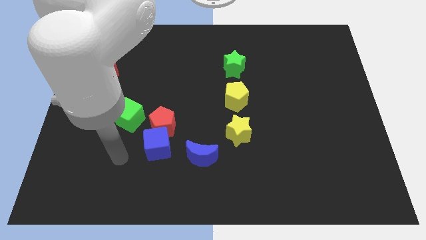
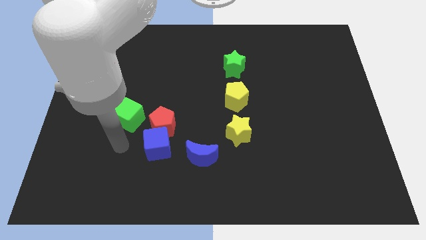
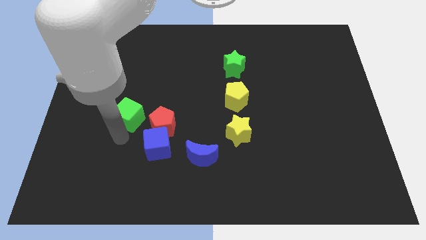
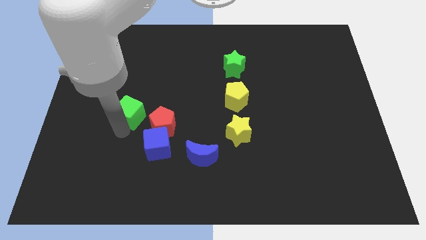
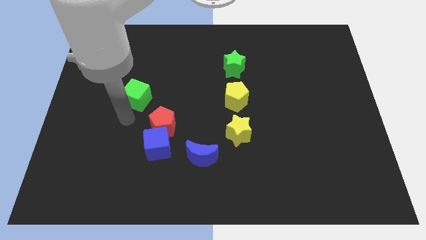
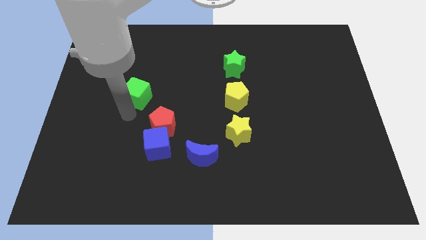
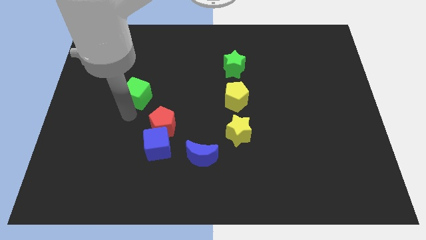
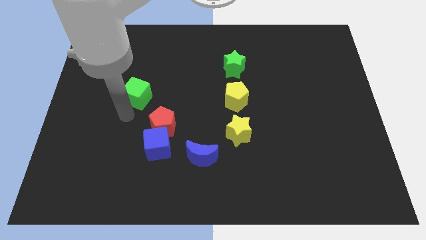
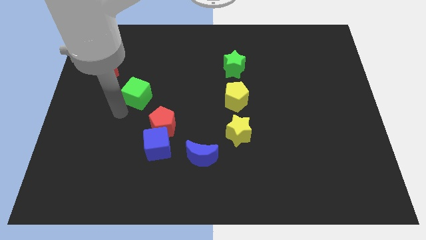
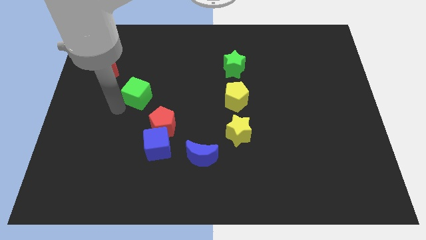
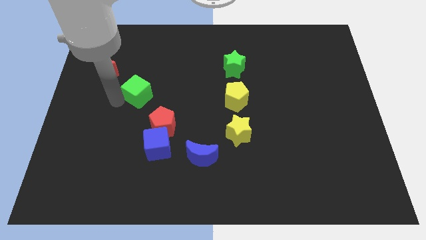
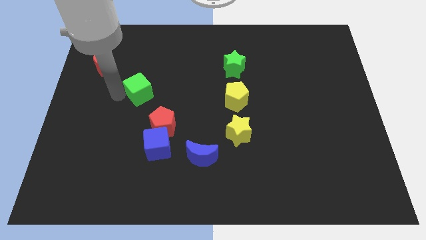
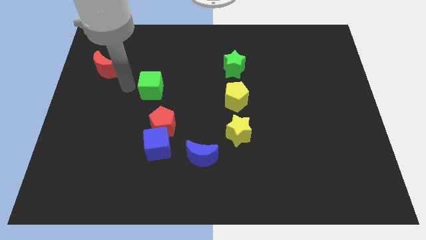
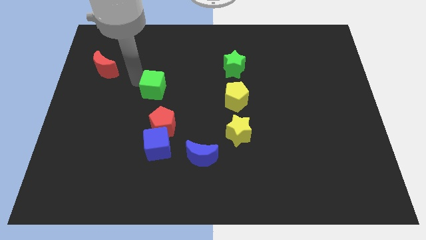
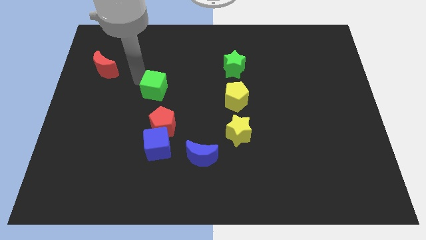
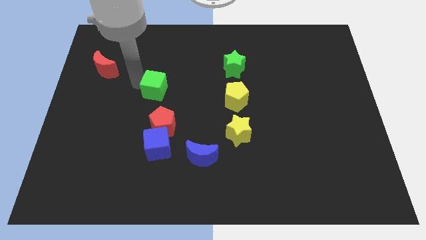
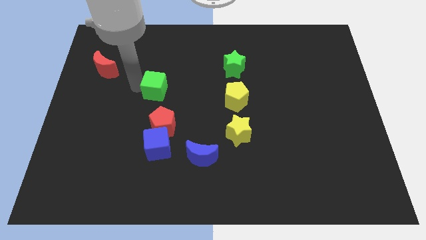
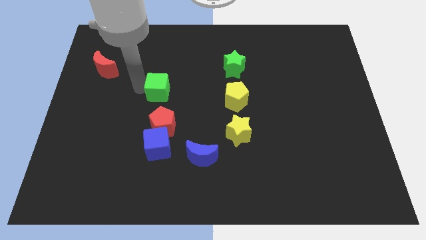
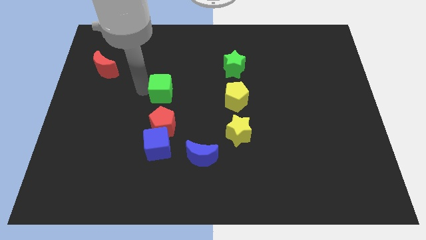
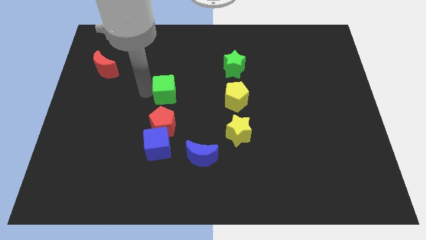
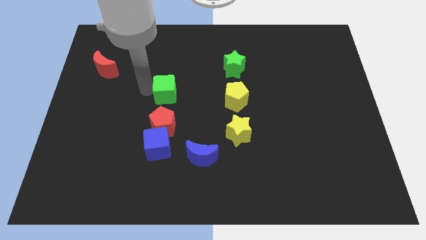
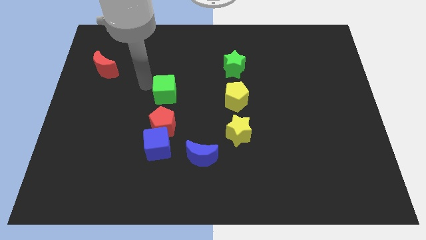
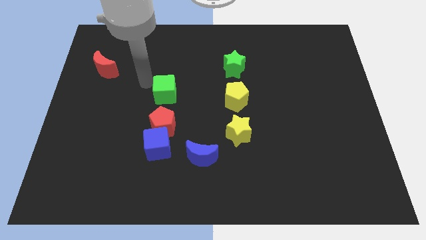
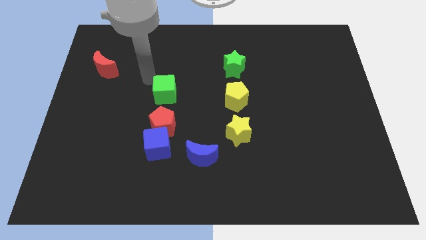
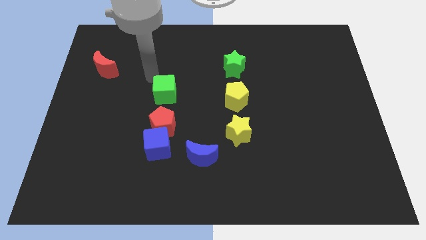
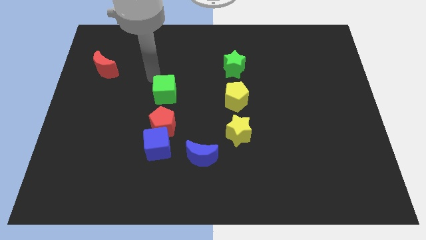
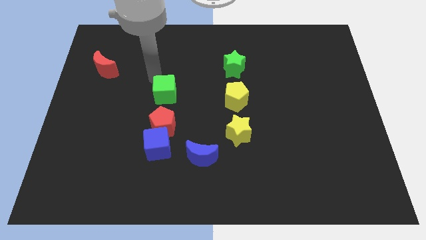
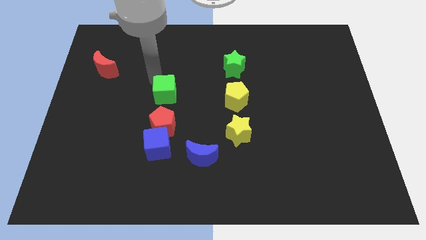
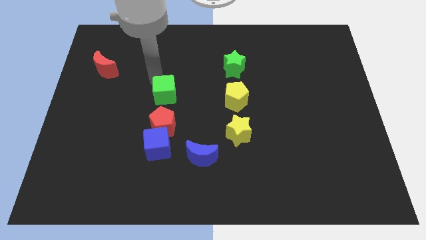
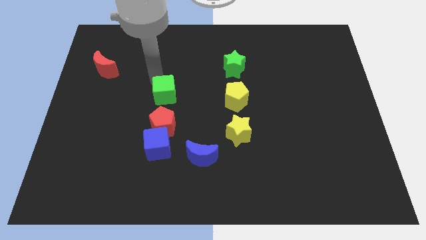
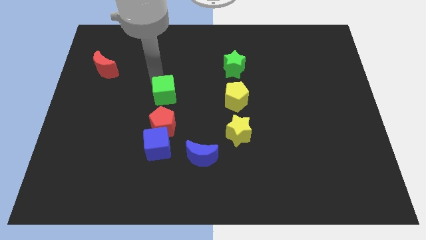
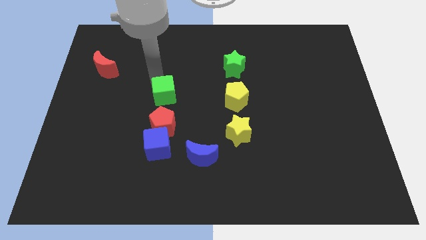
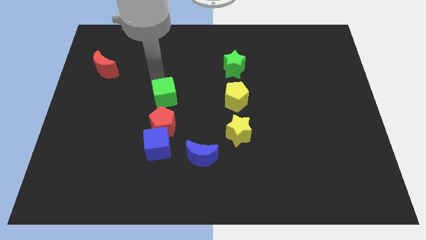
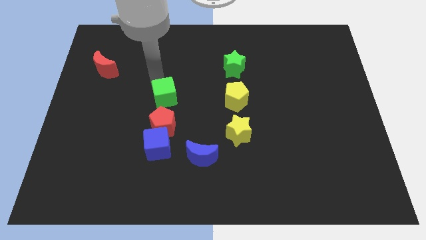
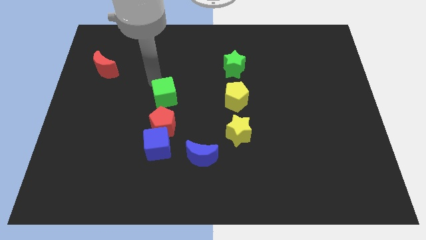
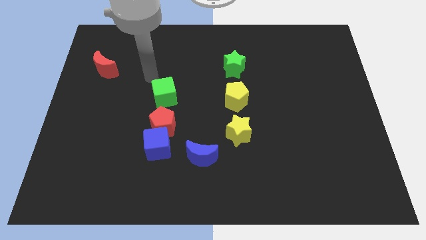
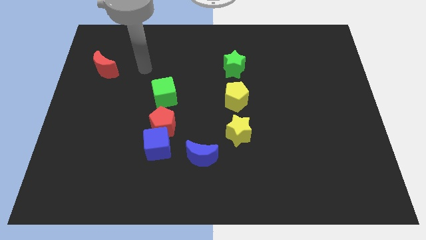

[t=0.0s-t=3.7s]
move the green cube to the top of the red pentagon

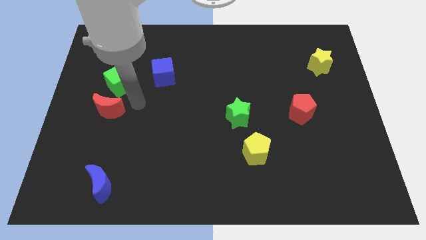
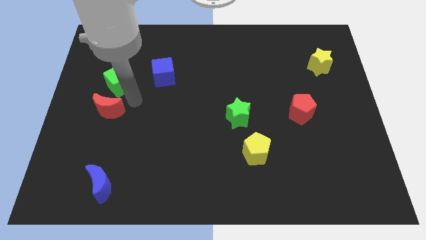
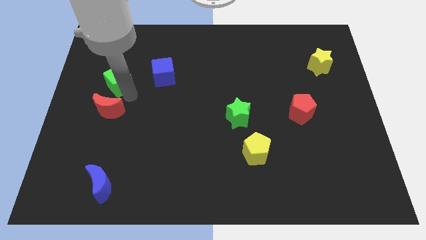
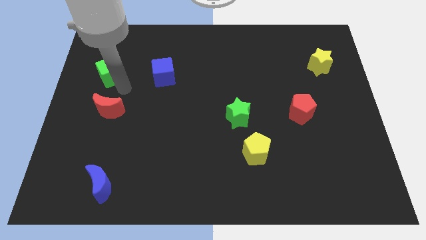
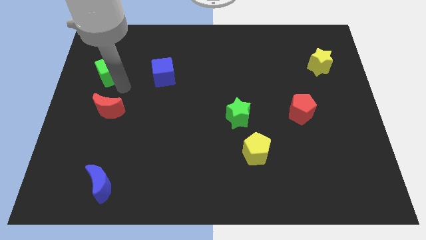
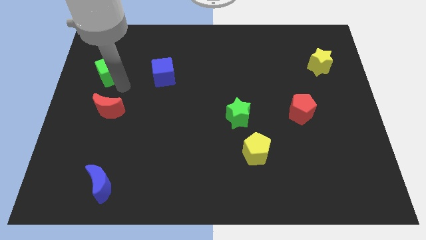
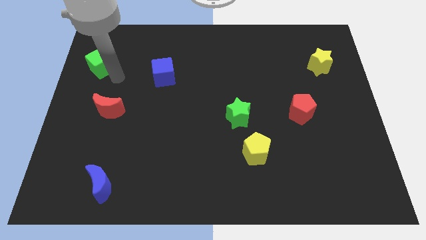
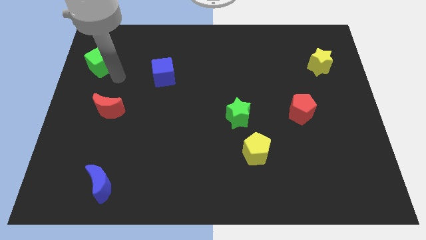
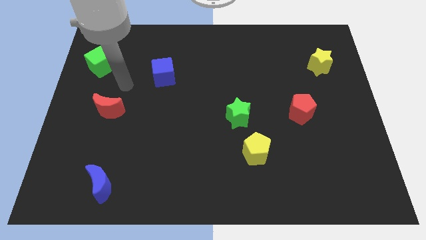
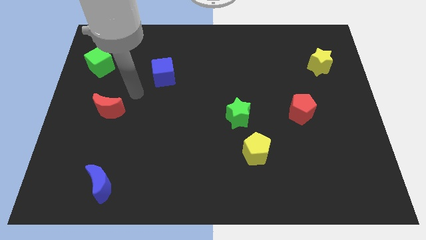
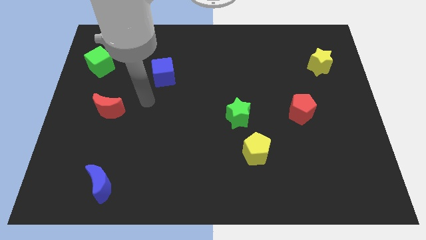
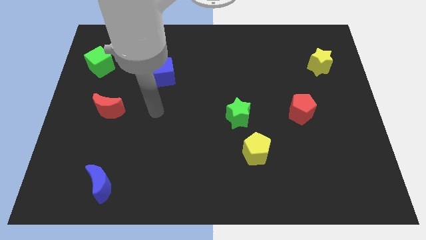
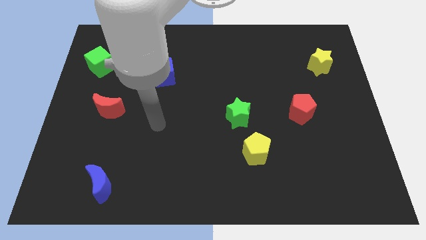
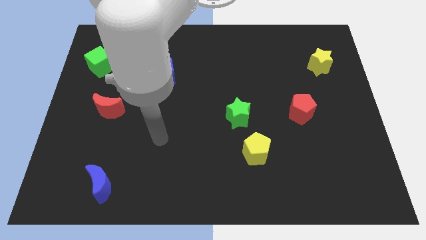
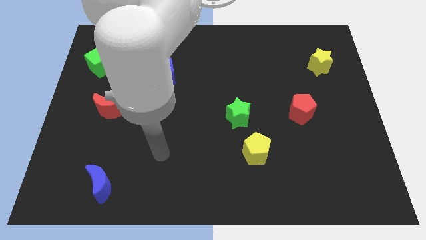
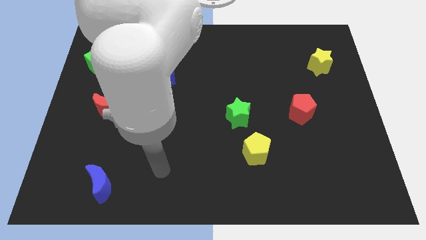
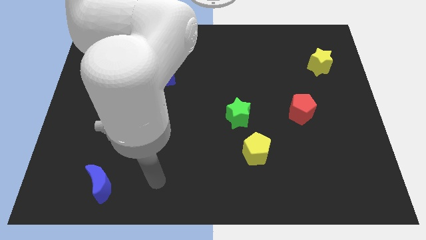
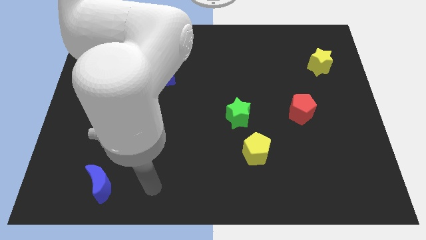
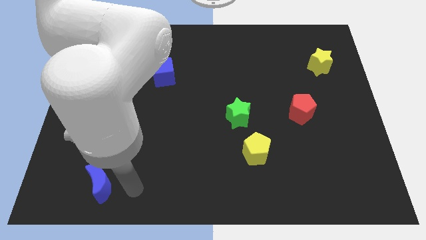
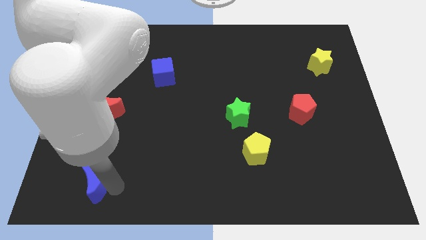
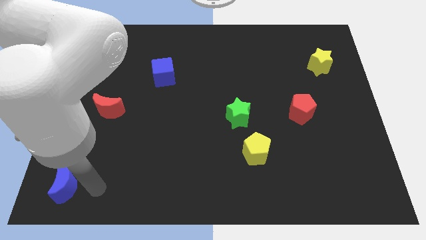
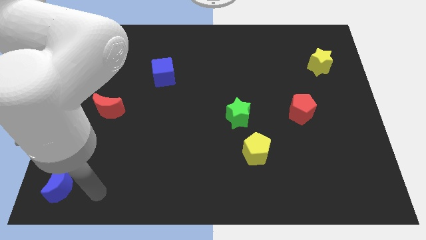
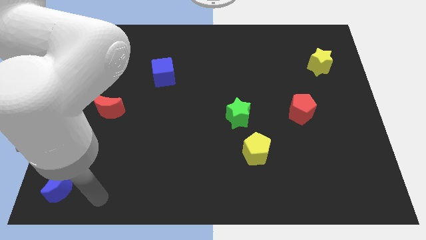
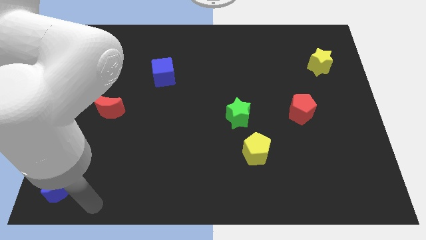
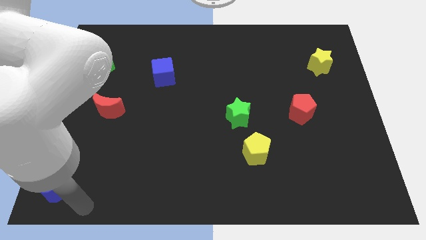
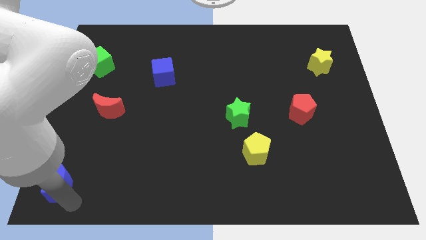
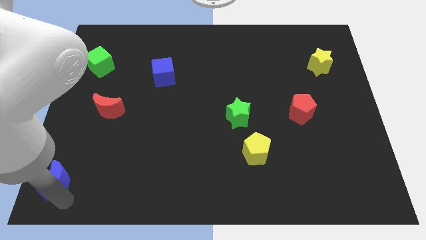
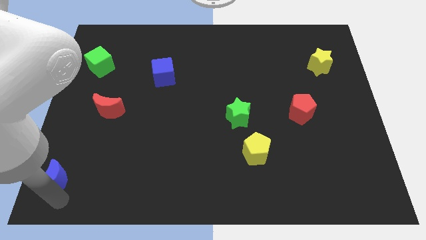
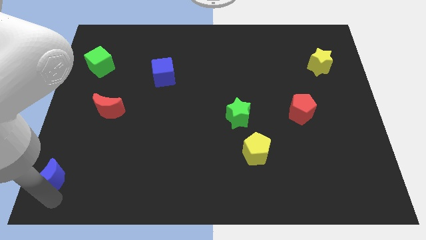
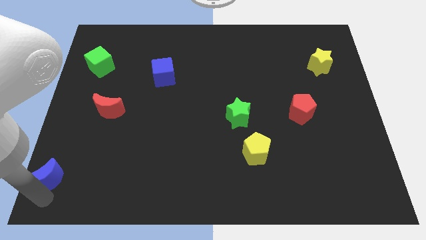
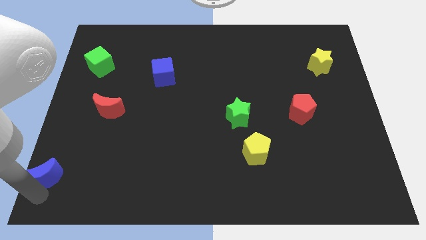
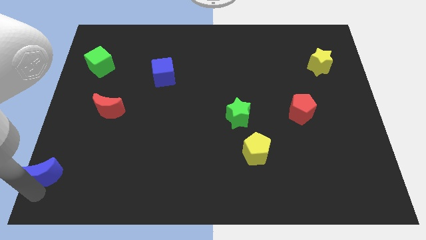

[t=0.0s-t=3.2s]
drag the green star towards top right and blue crescent towards the bottom left

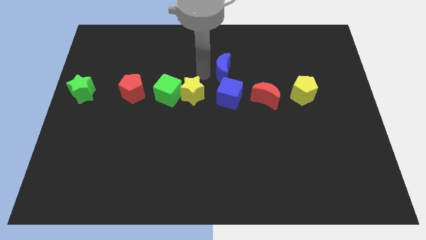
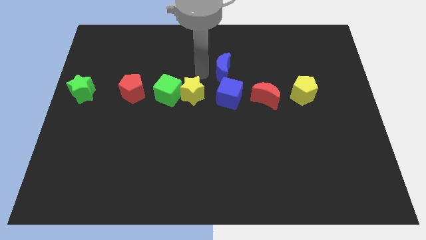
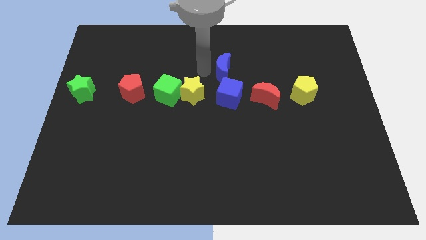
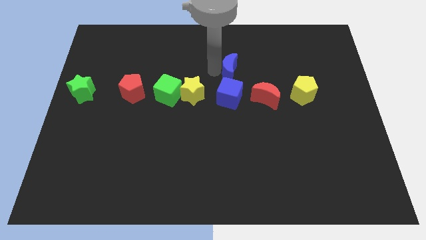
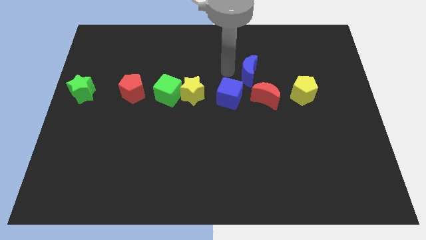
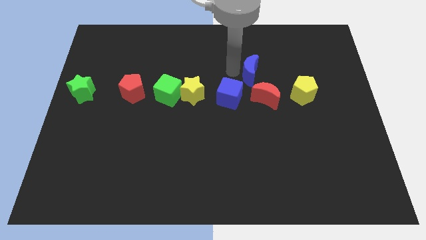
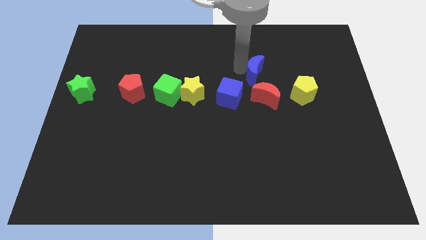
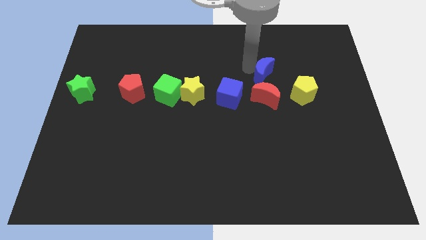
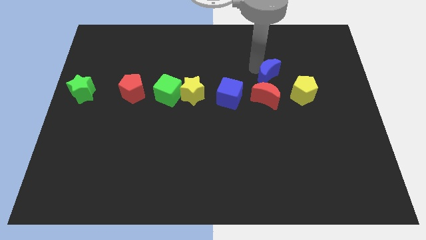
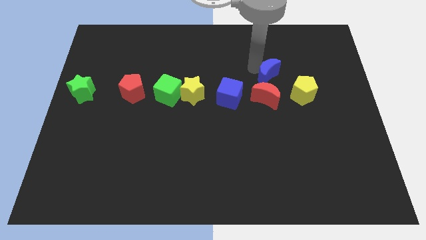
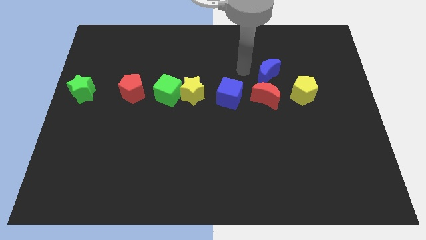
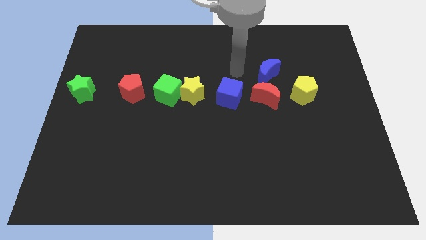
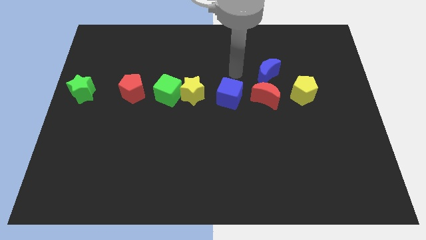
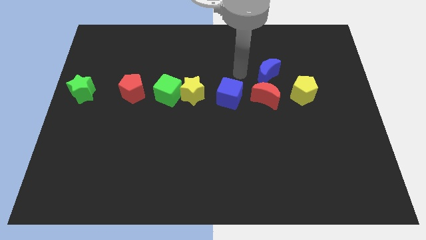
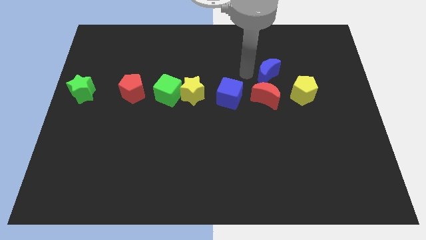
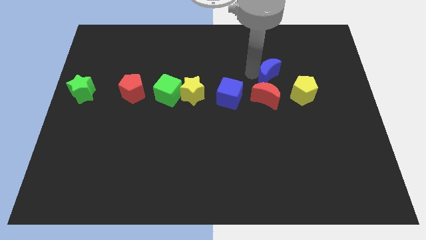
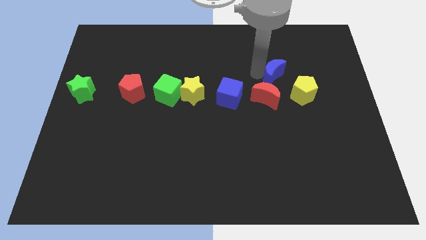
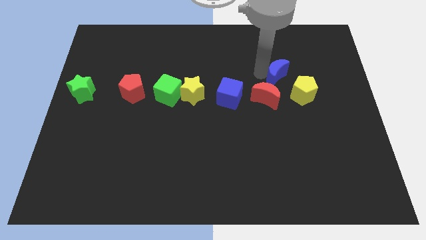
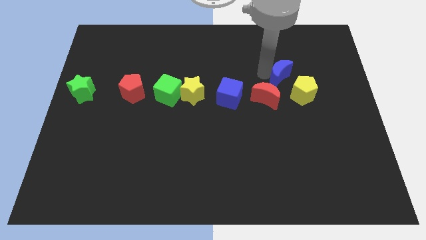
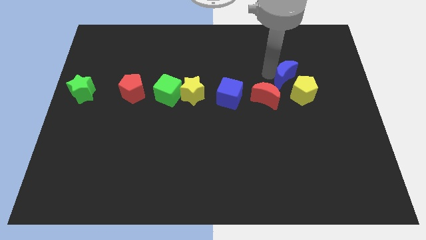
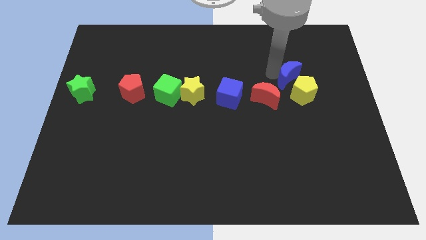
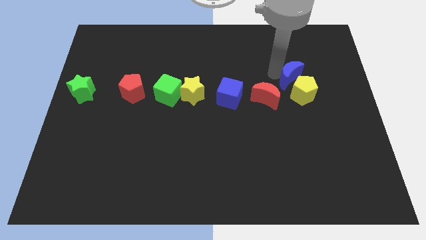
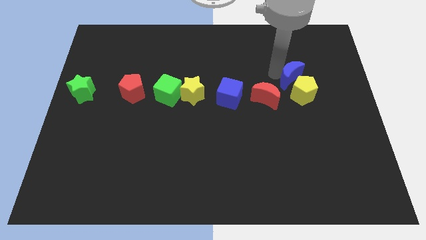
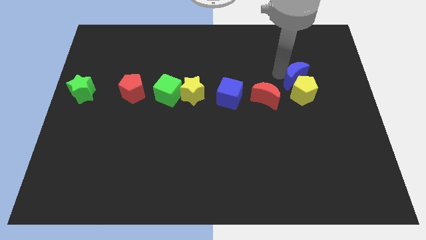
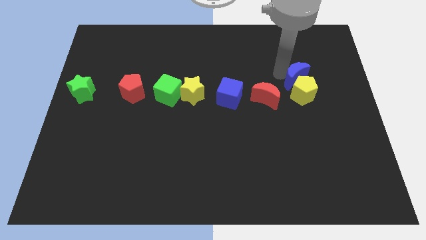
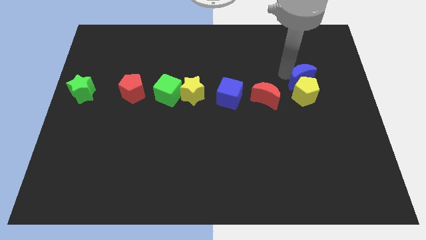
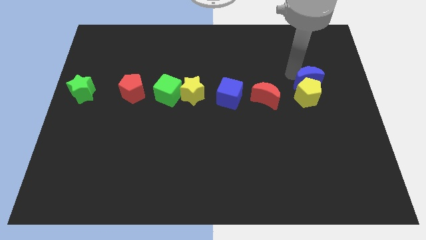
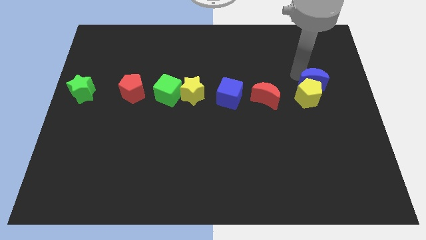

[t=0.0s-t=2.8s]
push the blue crescent to the top of the yellow pentagon
